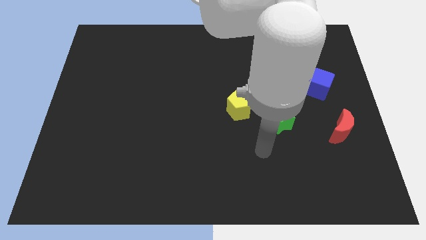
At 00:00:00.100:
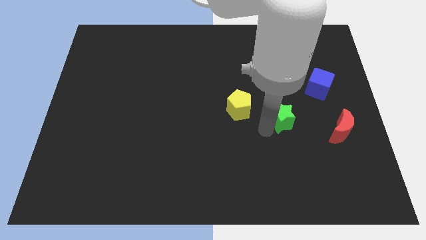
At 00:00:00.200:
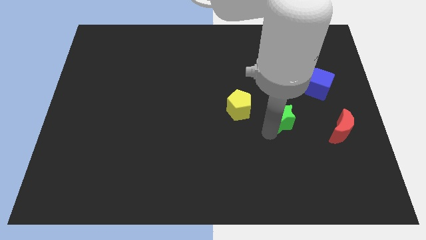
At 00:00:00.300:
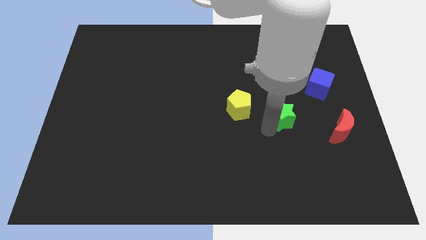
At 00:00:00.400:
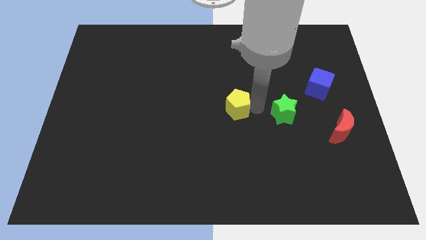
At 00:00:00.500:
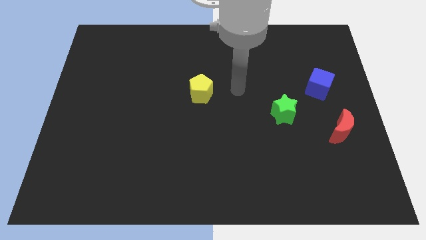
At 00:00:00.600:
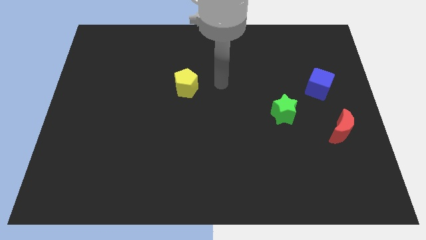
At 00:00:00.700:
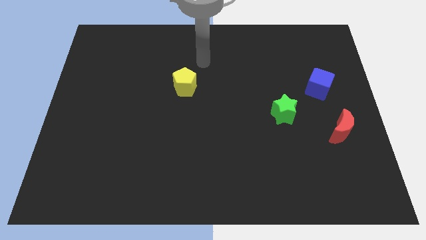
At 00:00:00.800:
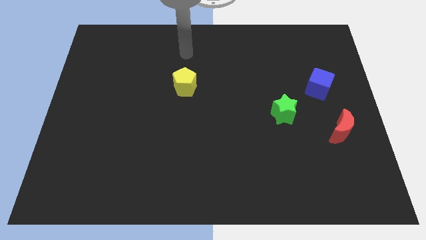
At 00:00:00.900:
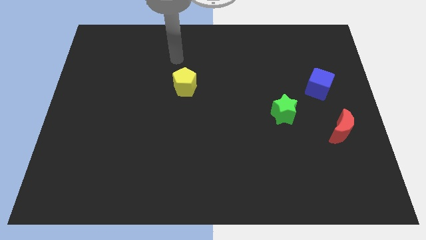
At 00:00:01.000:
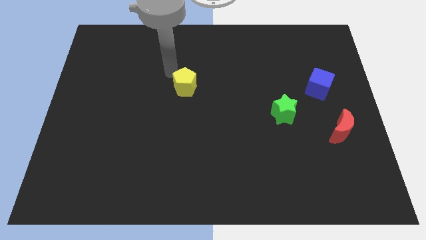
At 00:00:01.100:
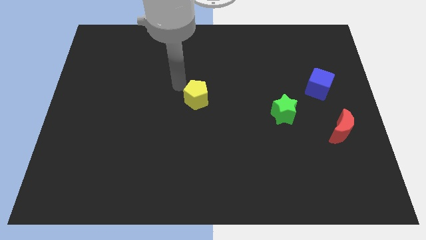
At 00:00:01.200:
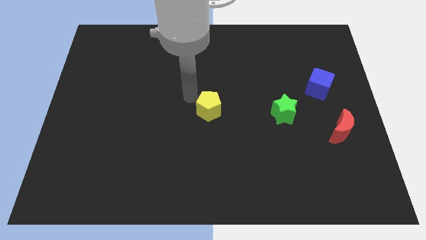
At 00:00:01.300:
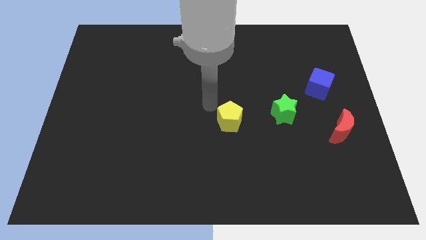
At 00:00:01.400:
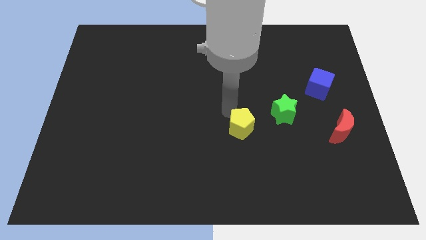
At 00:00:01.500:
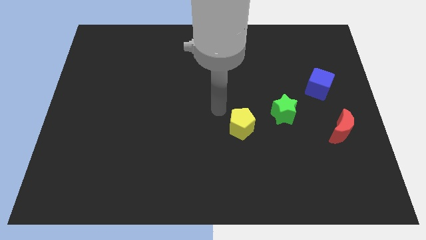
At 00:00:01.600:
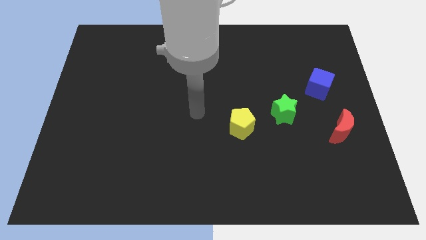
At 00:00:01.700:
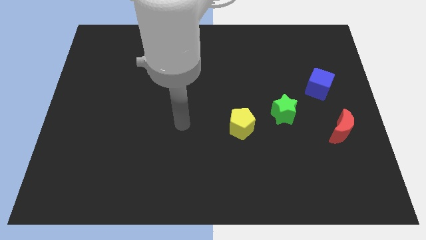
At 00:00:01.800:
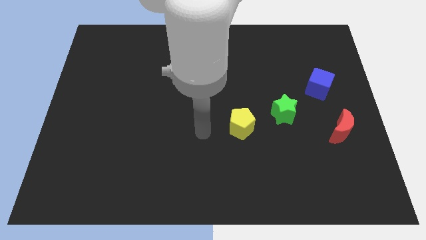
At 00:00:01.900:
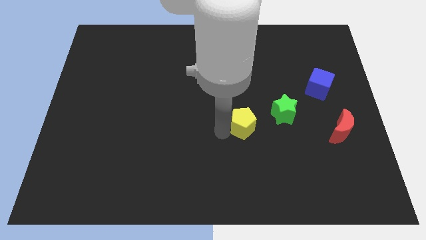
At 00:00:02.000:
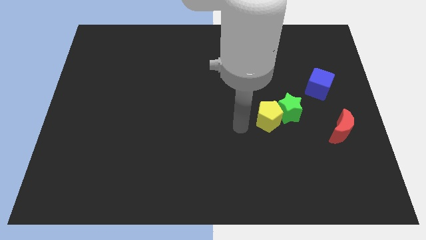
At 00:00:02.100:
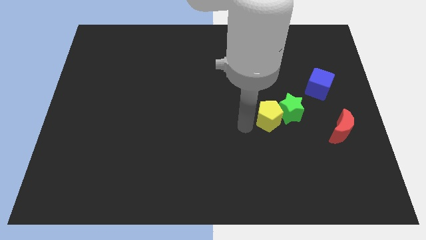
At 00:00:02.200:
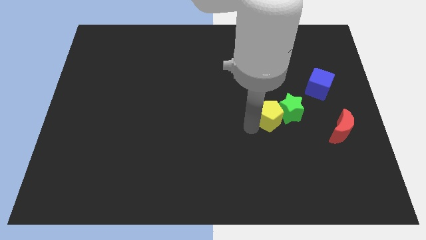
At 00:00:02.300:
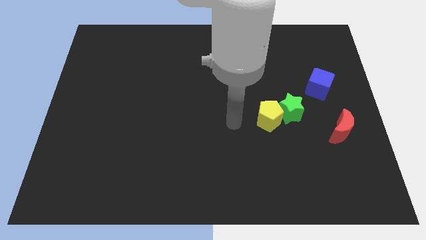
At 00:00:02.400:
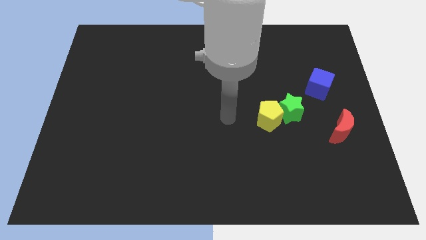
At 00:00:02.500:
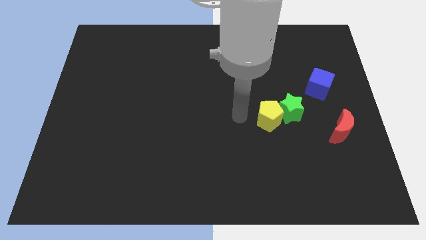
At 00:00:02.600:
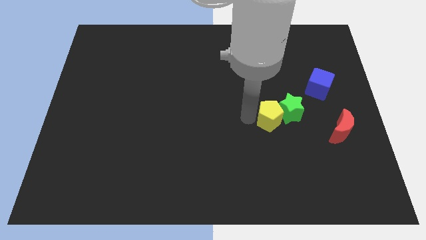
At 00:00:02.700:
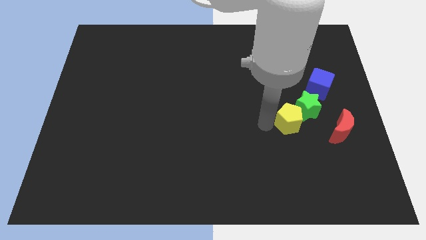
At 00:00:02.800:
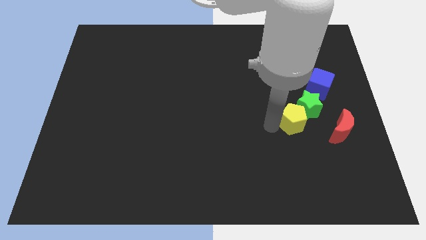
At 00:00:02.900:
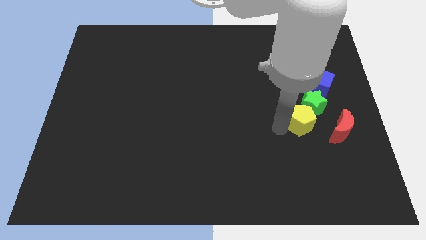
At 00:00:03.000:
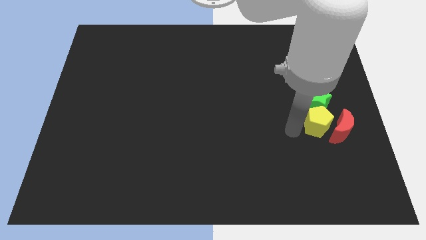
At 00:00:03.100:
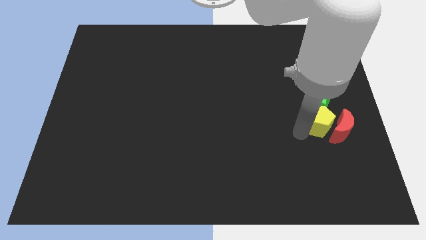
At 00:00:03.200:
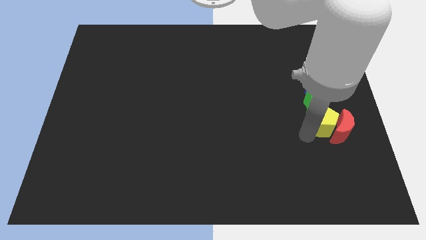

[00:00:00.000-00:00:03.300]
slide the yellow block to the red moon

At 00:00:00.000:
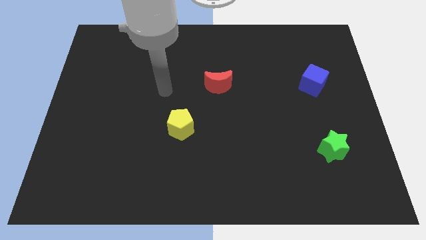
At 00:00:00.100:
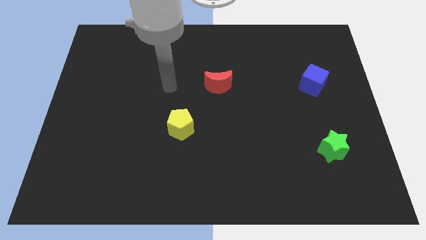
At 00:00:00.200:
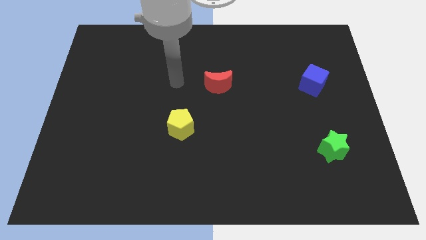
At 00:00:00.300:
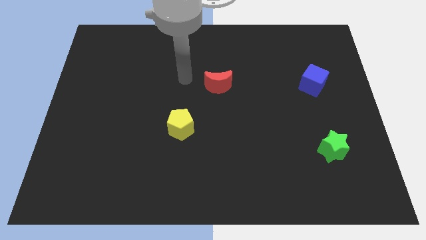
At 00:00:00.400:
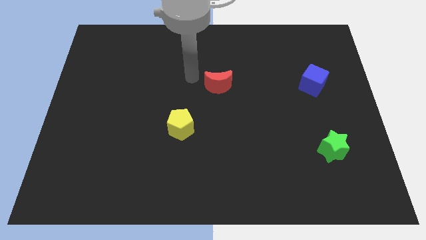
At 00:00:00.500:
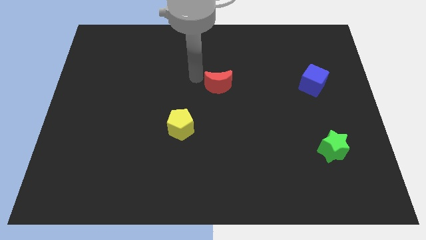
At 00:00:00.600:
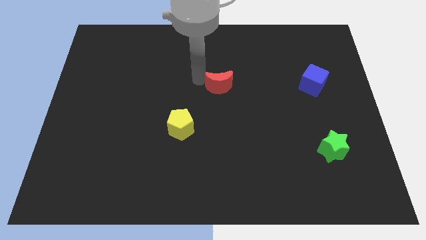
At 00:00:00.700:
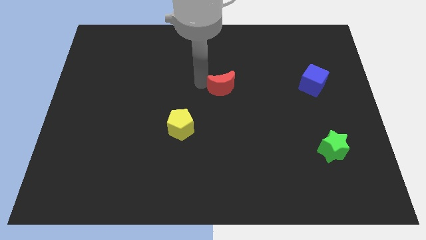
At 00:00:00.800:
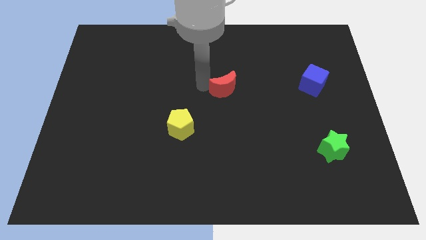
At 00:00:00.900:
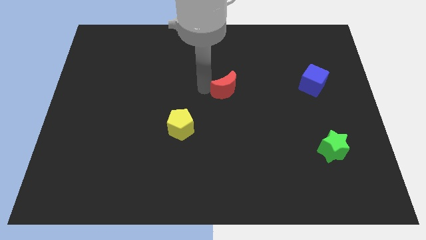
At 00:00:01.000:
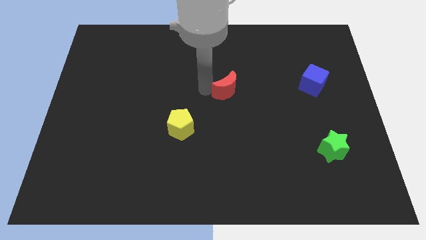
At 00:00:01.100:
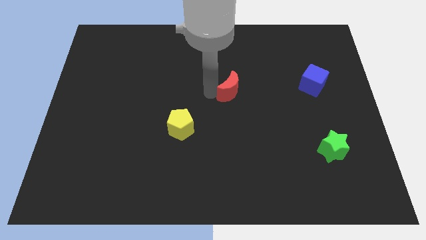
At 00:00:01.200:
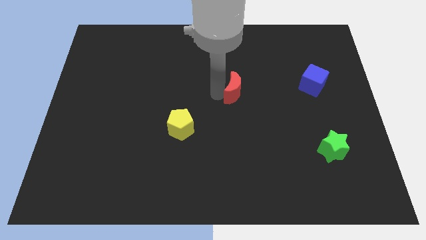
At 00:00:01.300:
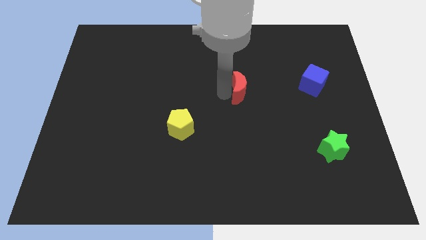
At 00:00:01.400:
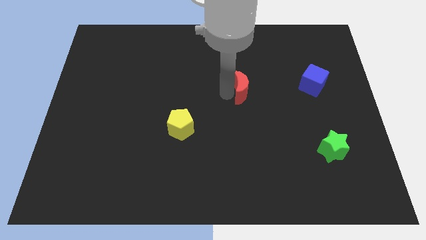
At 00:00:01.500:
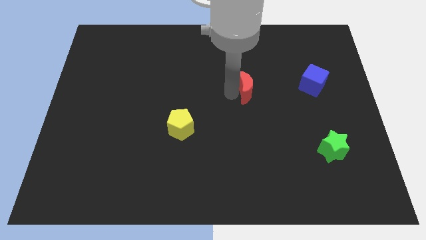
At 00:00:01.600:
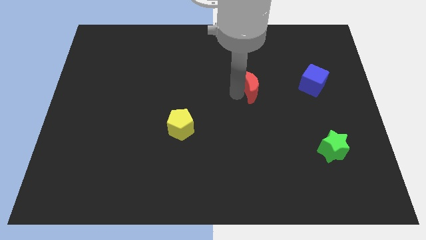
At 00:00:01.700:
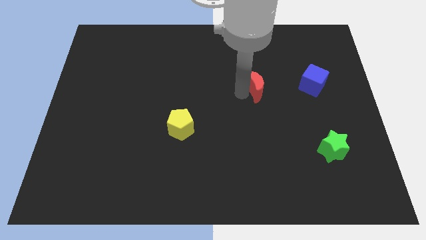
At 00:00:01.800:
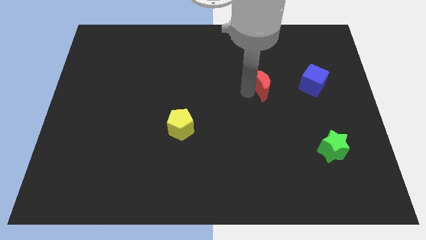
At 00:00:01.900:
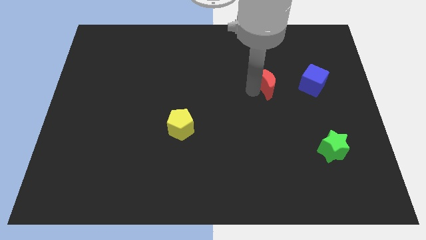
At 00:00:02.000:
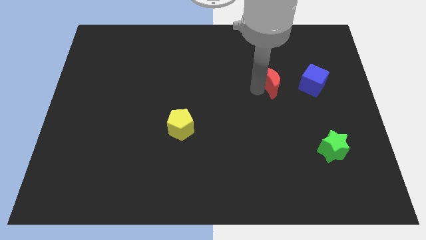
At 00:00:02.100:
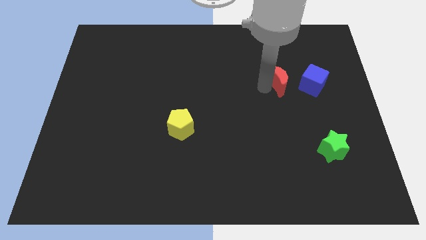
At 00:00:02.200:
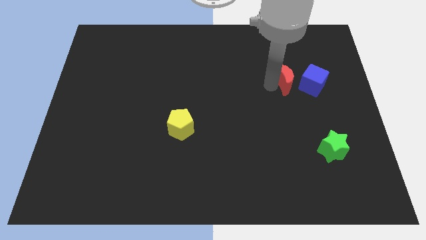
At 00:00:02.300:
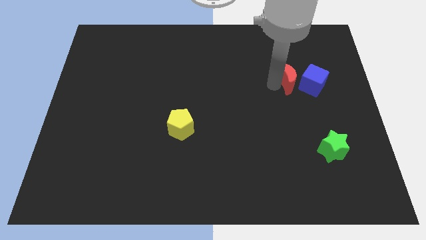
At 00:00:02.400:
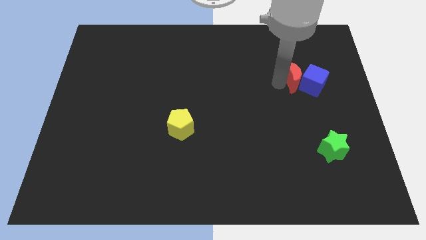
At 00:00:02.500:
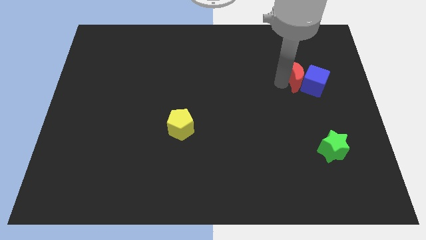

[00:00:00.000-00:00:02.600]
put the red block next to the blue cube

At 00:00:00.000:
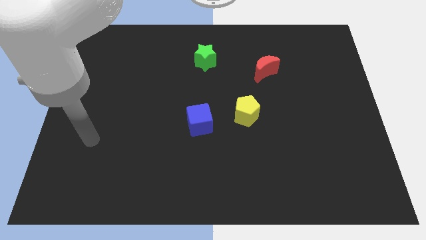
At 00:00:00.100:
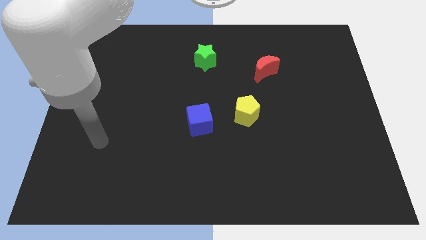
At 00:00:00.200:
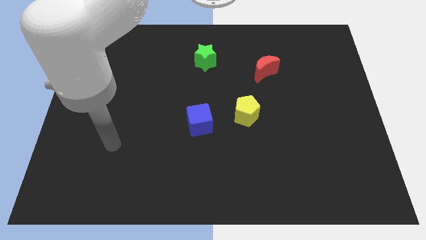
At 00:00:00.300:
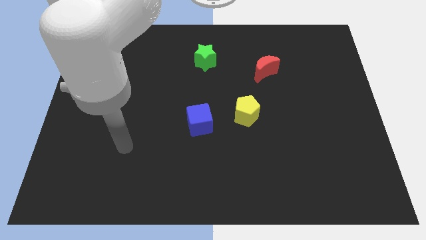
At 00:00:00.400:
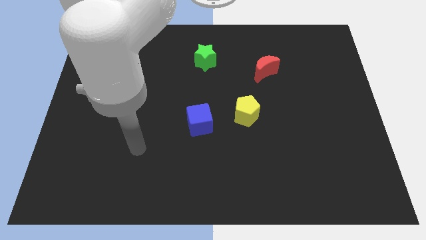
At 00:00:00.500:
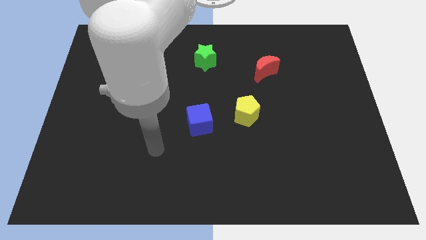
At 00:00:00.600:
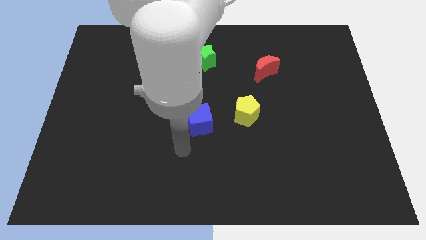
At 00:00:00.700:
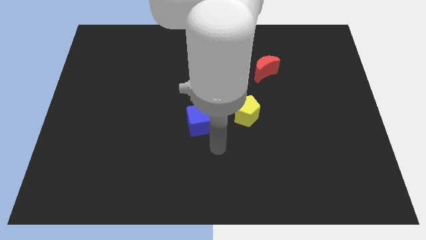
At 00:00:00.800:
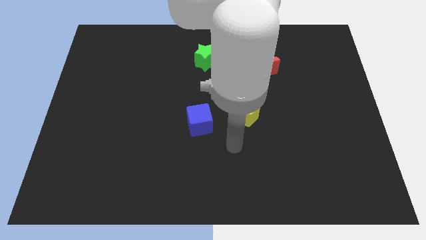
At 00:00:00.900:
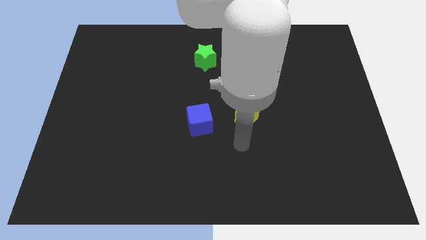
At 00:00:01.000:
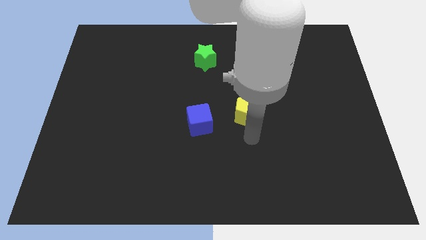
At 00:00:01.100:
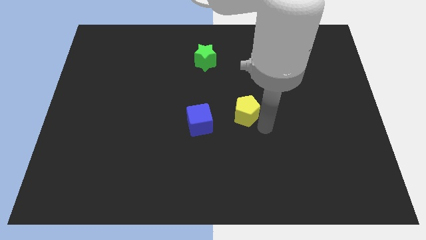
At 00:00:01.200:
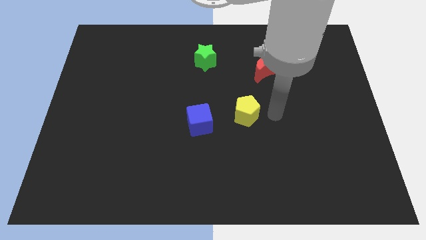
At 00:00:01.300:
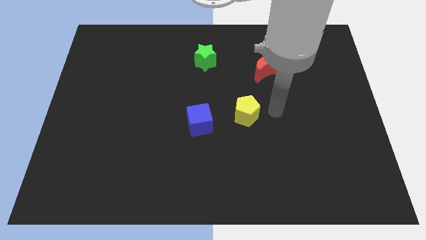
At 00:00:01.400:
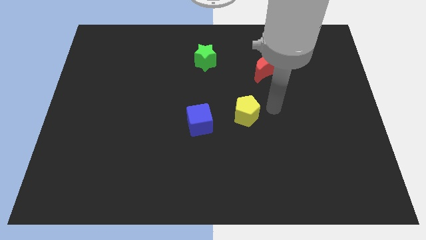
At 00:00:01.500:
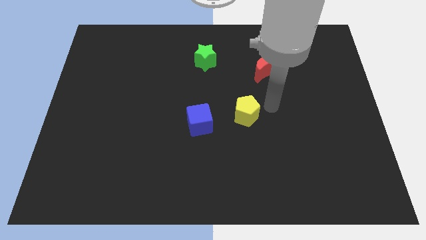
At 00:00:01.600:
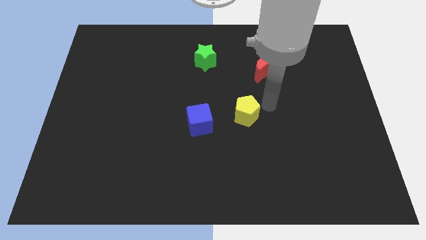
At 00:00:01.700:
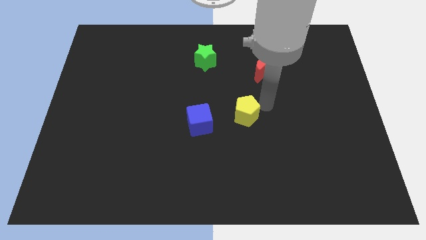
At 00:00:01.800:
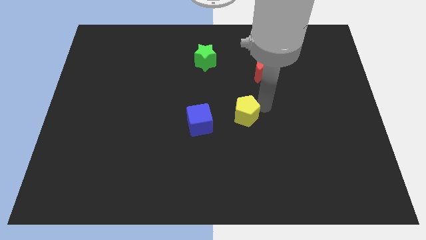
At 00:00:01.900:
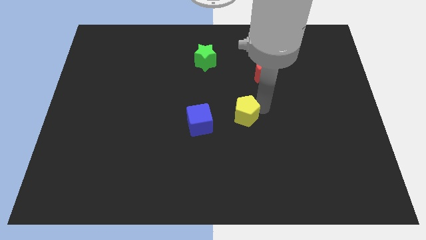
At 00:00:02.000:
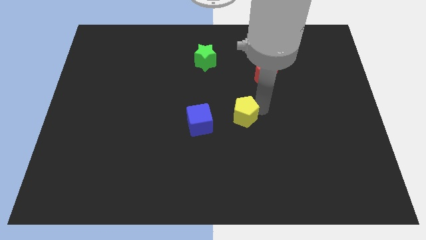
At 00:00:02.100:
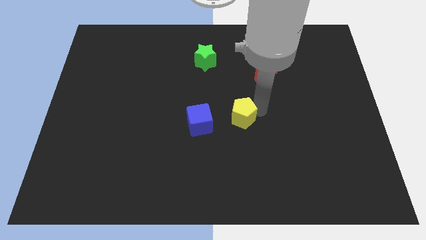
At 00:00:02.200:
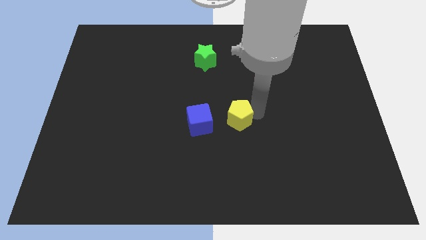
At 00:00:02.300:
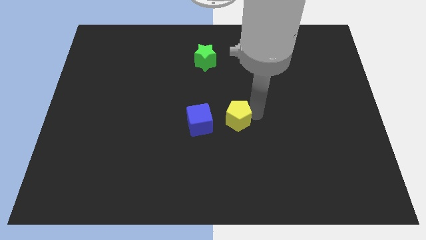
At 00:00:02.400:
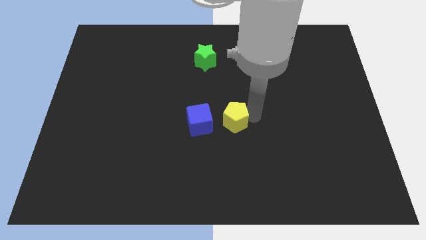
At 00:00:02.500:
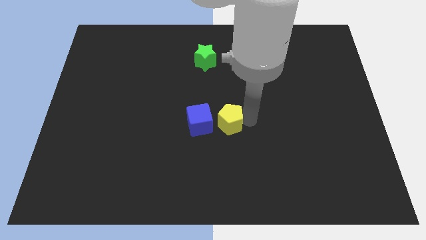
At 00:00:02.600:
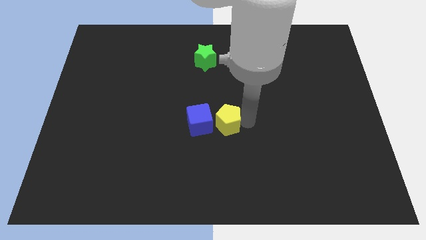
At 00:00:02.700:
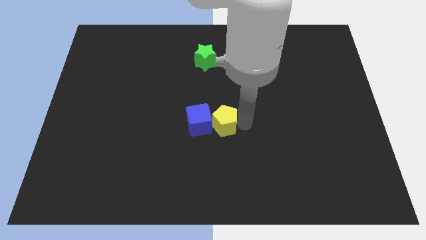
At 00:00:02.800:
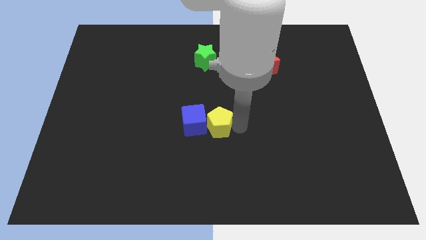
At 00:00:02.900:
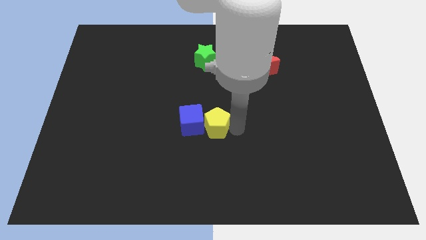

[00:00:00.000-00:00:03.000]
slide the yellow block close to the blue block
